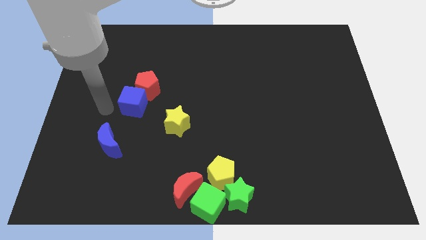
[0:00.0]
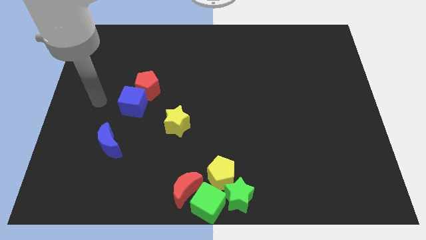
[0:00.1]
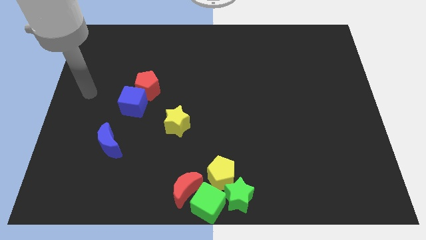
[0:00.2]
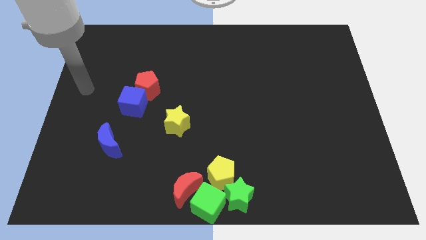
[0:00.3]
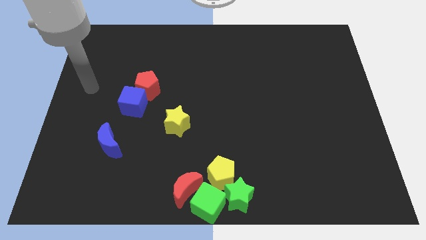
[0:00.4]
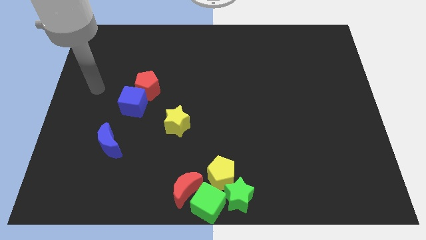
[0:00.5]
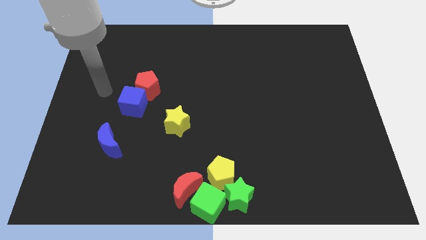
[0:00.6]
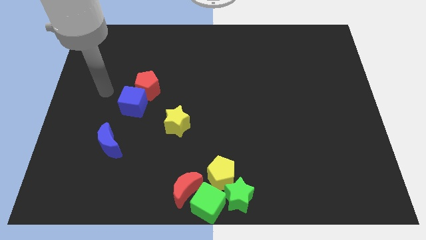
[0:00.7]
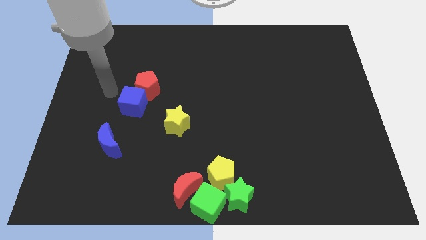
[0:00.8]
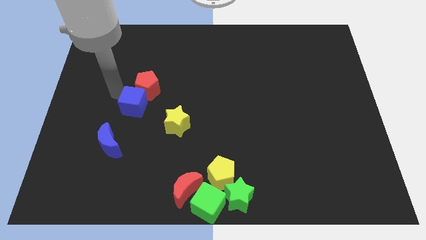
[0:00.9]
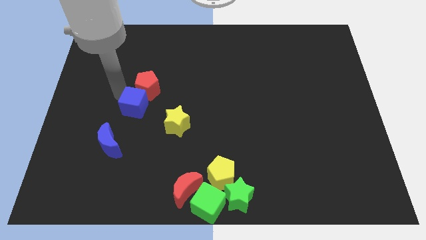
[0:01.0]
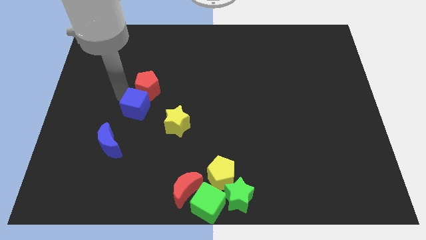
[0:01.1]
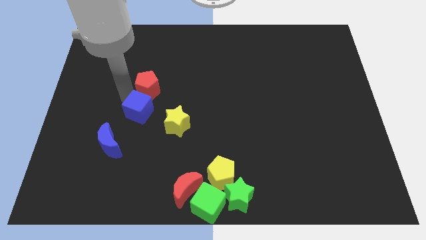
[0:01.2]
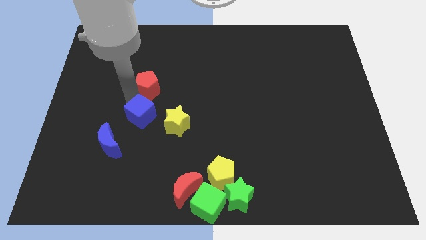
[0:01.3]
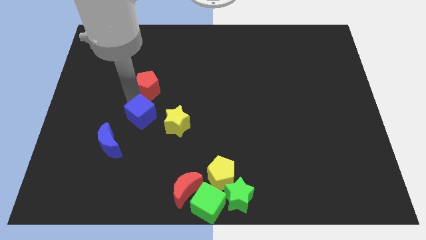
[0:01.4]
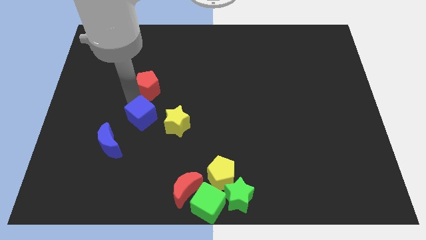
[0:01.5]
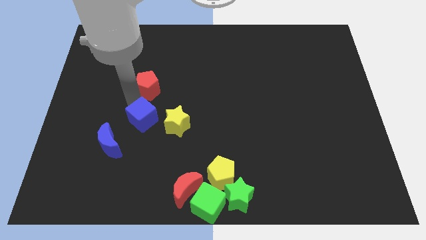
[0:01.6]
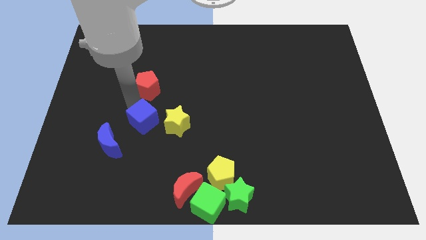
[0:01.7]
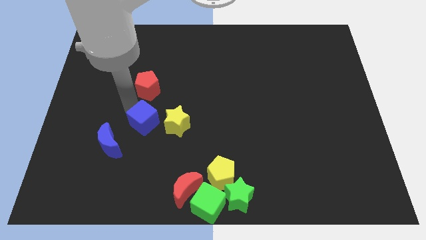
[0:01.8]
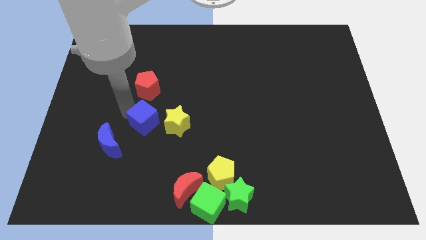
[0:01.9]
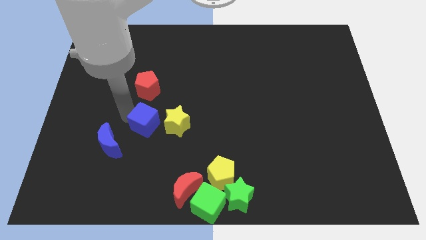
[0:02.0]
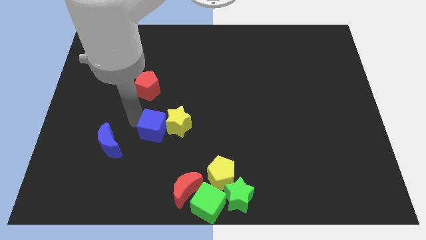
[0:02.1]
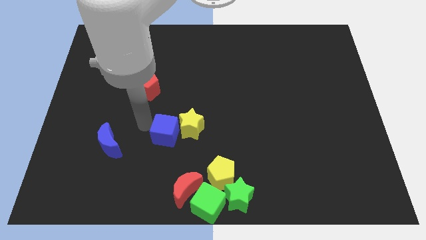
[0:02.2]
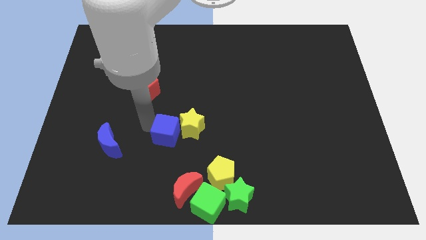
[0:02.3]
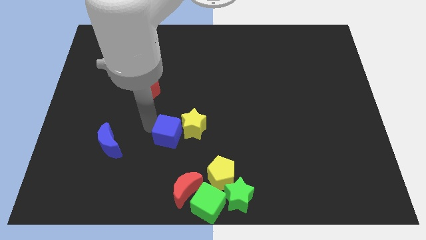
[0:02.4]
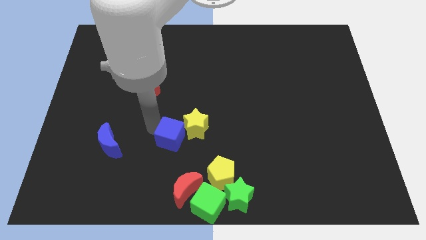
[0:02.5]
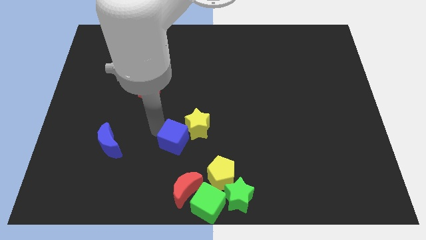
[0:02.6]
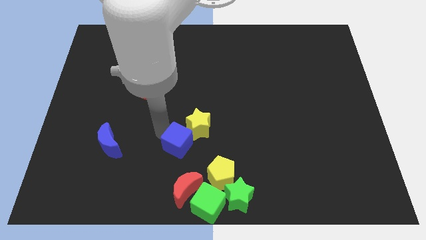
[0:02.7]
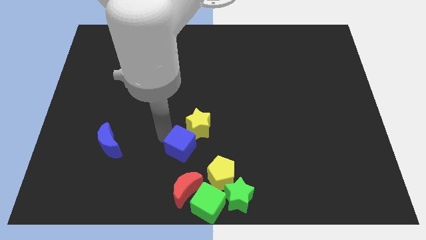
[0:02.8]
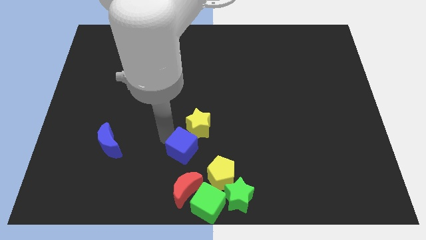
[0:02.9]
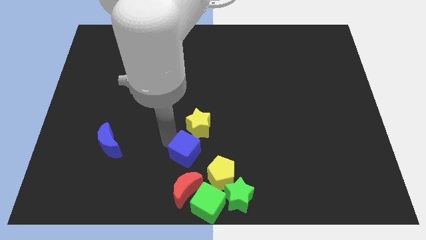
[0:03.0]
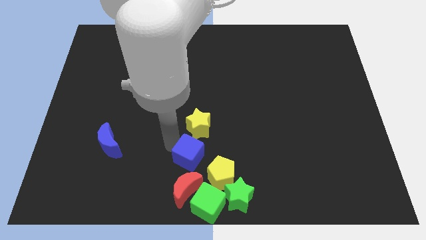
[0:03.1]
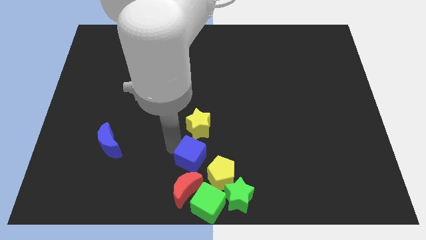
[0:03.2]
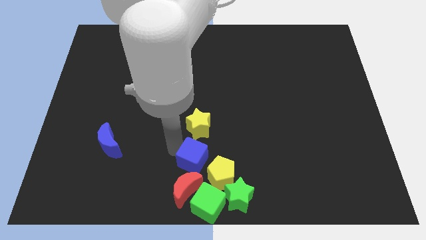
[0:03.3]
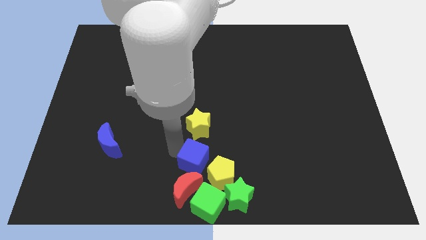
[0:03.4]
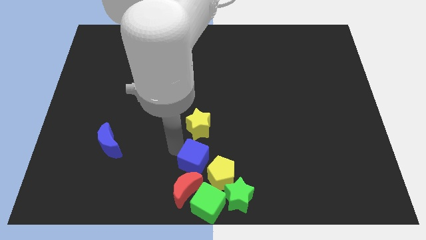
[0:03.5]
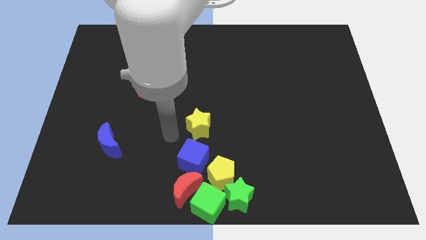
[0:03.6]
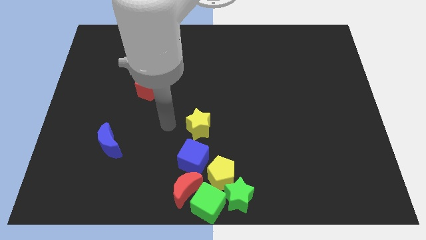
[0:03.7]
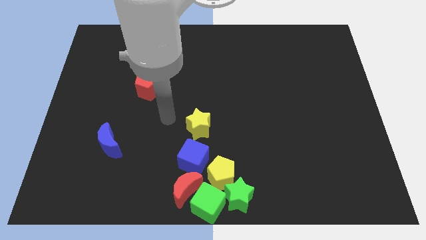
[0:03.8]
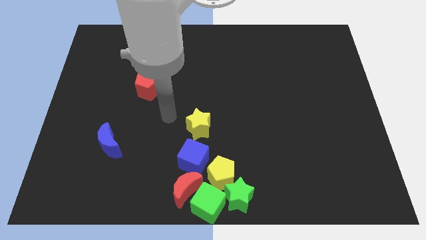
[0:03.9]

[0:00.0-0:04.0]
push the blue cube to the bottom of the yellow star

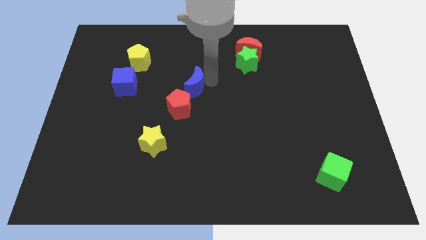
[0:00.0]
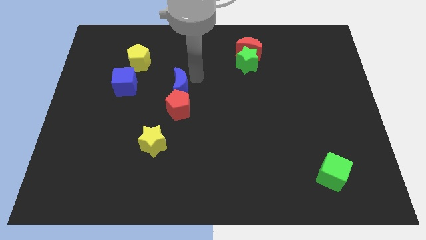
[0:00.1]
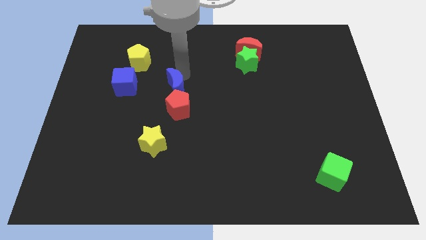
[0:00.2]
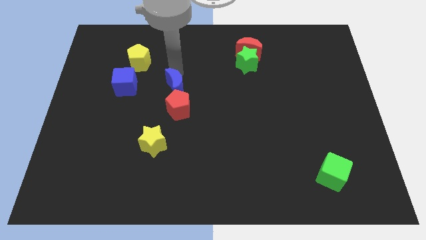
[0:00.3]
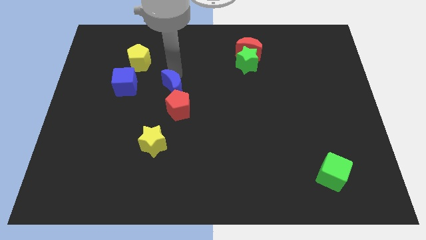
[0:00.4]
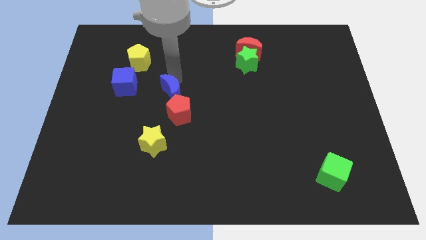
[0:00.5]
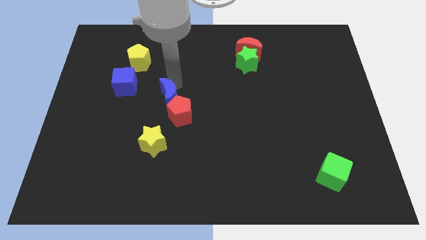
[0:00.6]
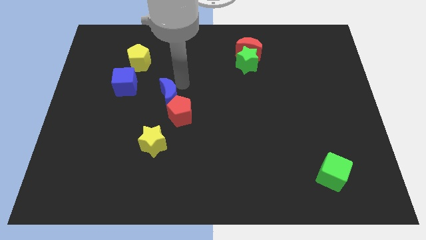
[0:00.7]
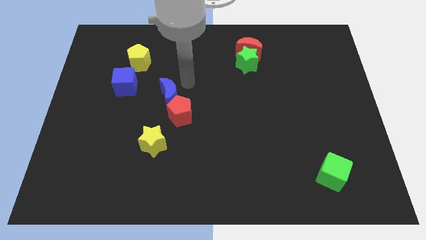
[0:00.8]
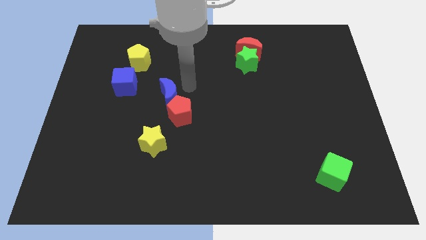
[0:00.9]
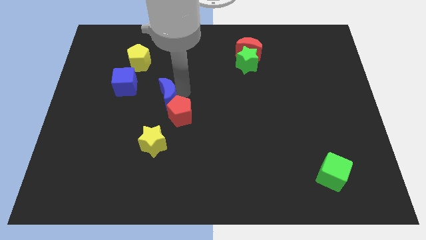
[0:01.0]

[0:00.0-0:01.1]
slide blue moon to the left slightly

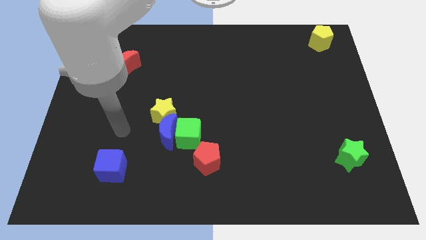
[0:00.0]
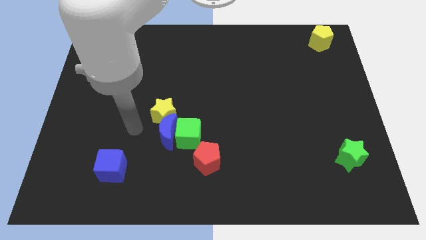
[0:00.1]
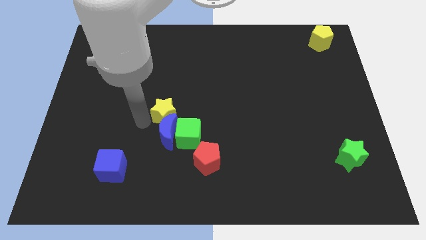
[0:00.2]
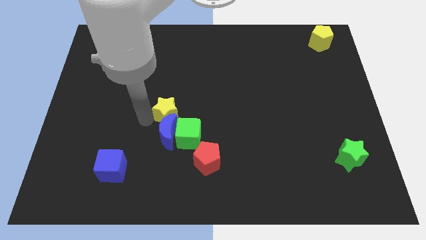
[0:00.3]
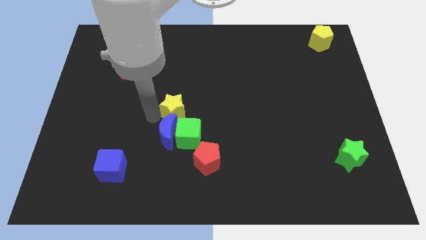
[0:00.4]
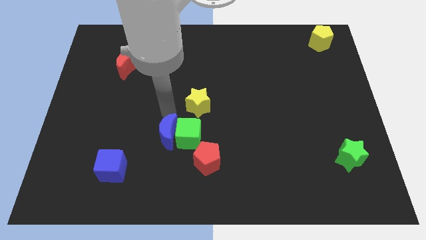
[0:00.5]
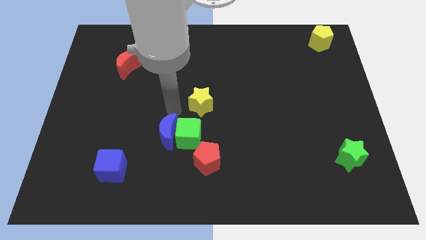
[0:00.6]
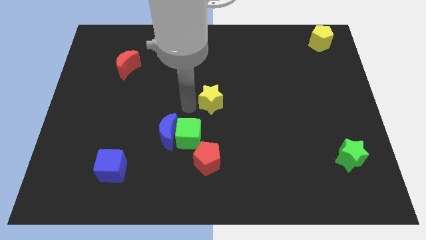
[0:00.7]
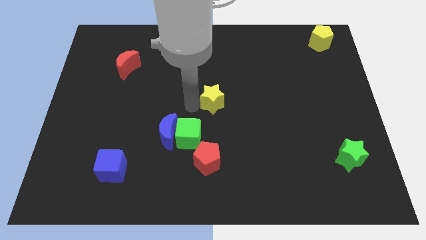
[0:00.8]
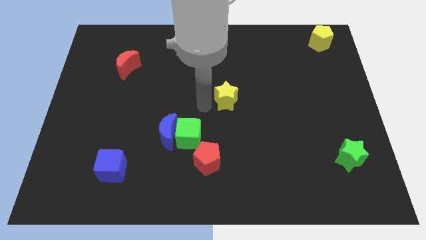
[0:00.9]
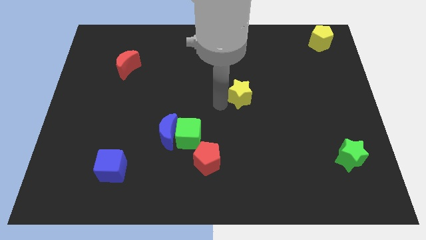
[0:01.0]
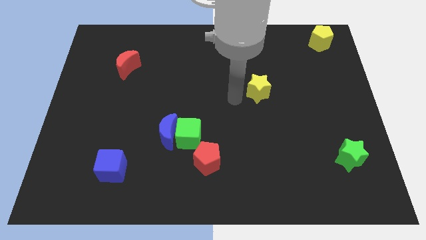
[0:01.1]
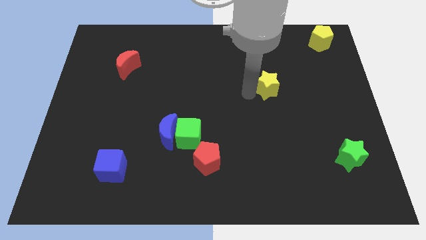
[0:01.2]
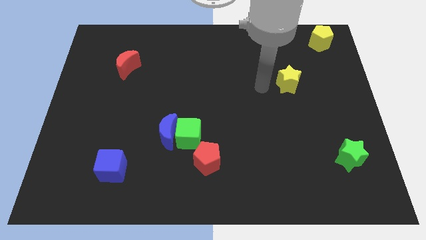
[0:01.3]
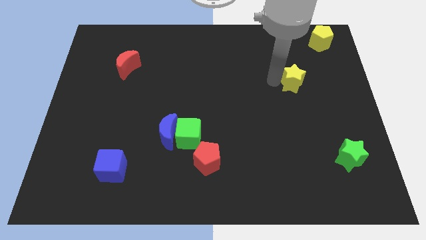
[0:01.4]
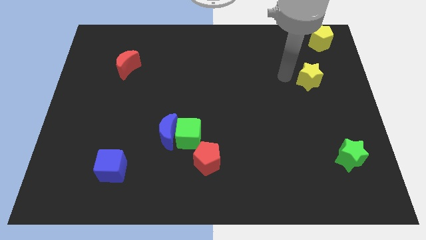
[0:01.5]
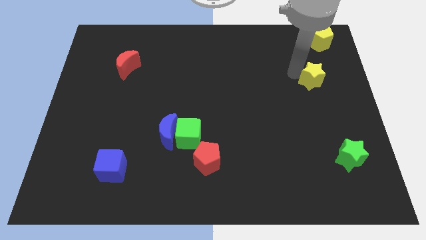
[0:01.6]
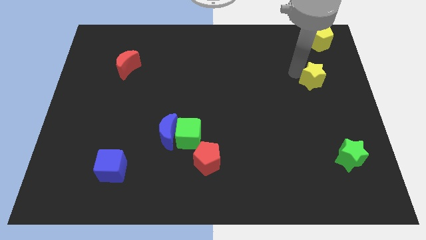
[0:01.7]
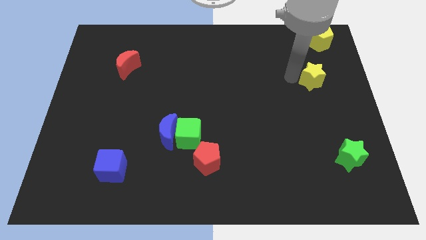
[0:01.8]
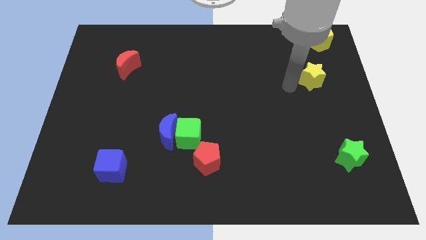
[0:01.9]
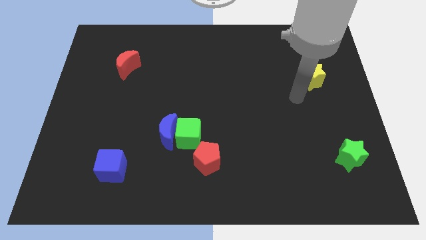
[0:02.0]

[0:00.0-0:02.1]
move the yellow star below the yellow pentagon

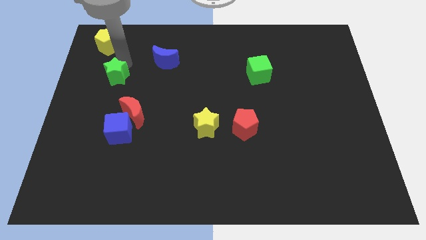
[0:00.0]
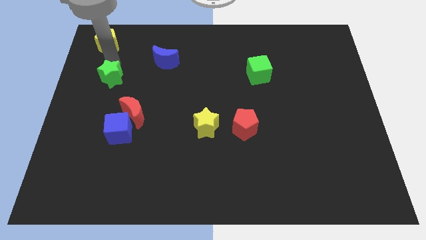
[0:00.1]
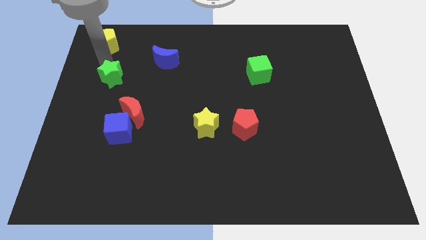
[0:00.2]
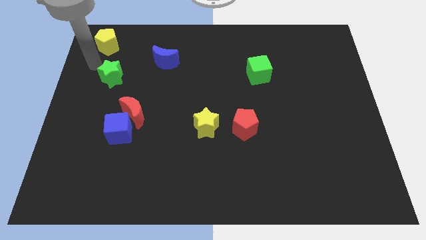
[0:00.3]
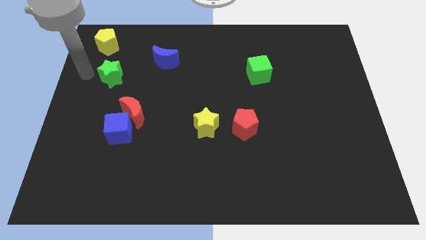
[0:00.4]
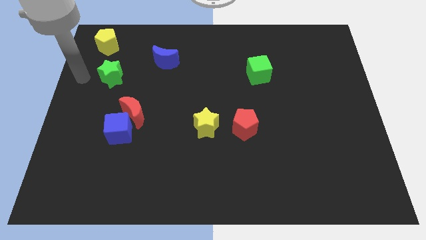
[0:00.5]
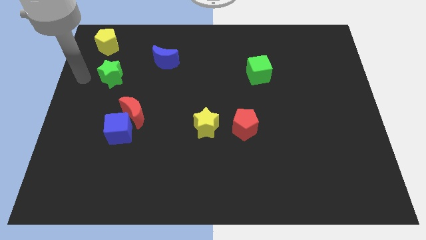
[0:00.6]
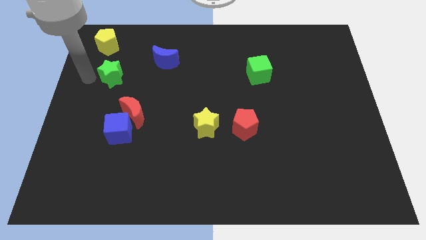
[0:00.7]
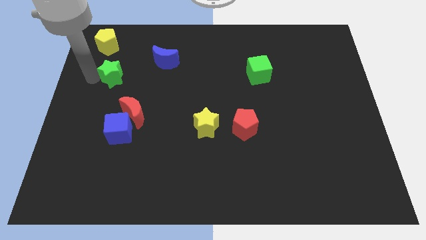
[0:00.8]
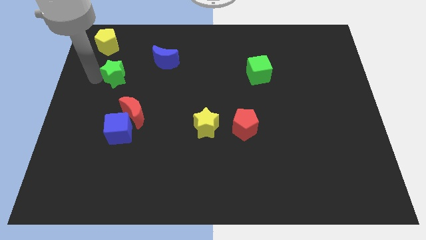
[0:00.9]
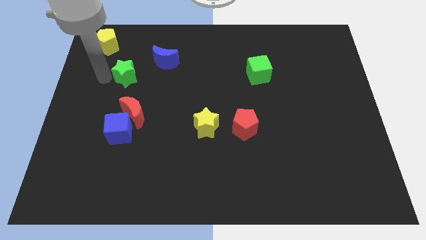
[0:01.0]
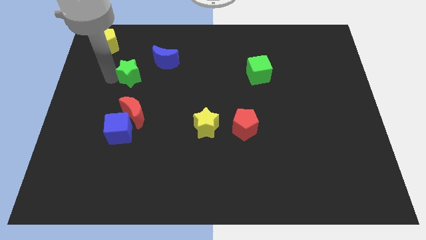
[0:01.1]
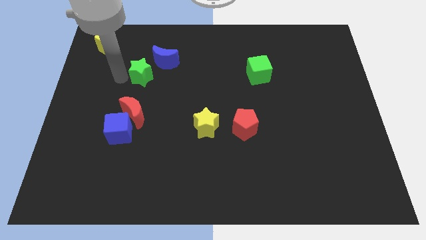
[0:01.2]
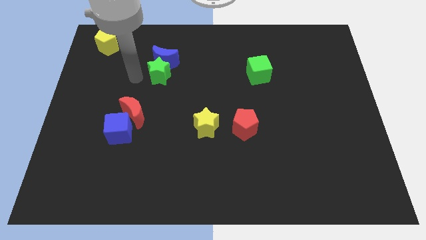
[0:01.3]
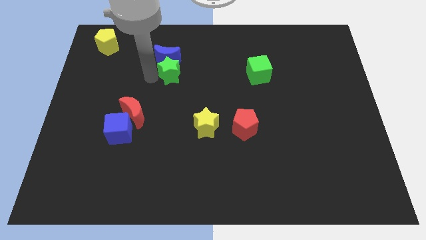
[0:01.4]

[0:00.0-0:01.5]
slide the green star to the bottom side of the blue crescent

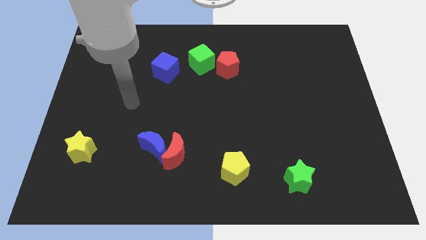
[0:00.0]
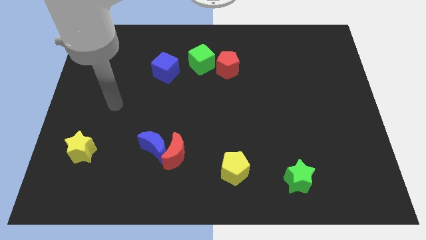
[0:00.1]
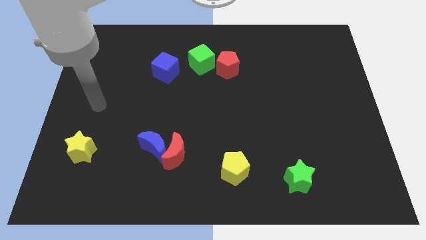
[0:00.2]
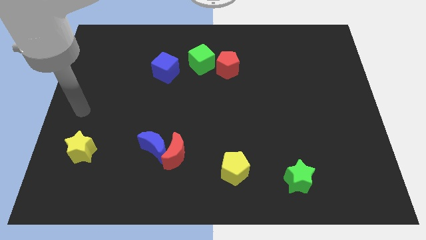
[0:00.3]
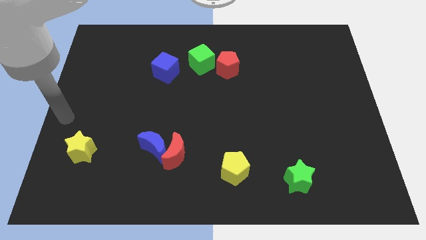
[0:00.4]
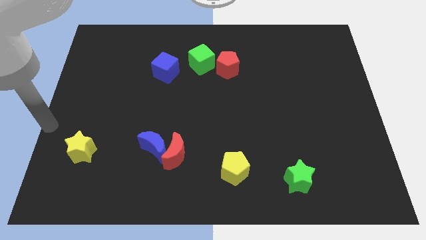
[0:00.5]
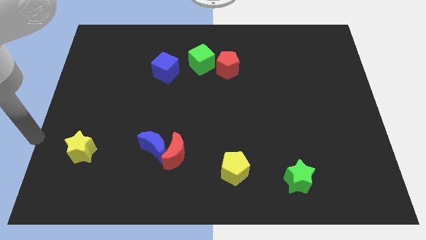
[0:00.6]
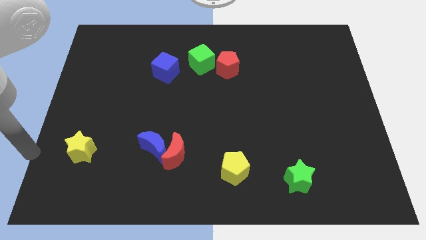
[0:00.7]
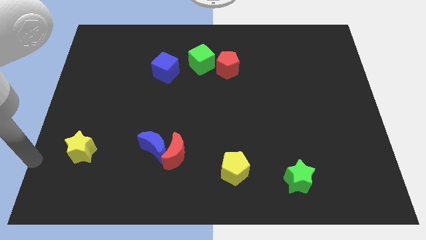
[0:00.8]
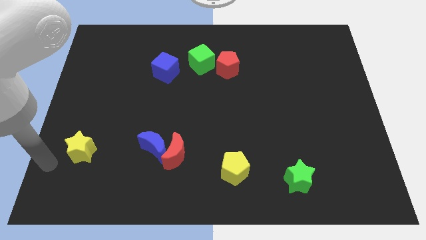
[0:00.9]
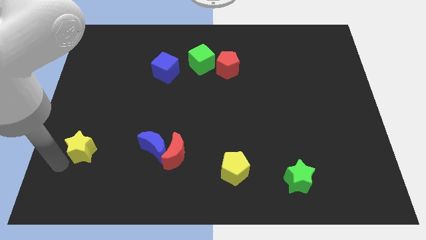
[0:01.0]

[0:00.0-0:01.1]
move the arm to the left to the yellow star
